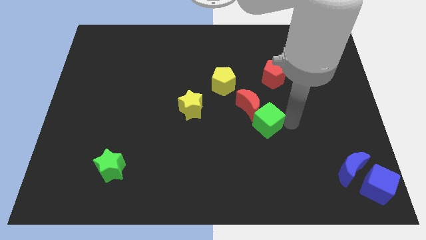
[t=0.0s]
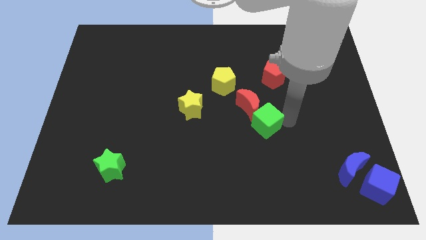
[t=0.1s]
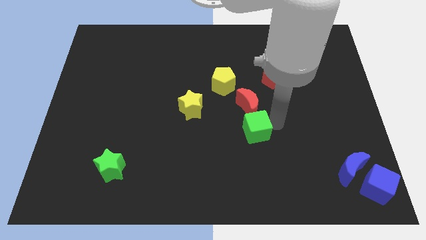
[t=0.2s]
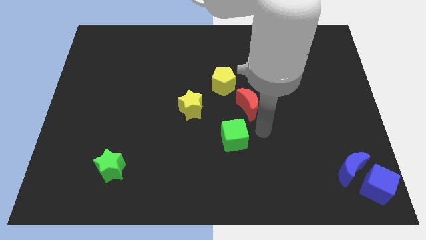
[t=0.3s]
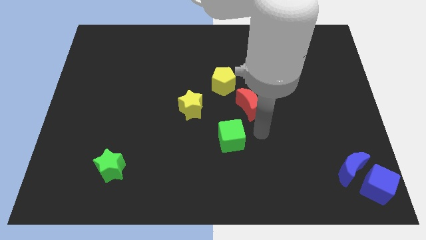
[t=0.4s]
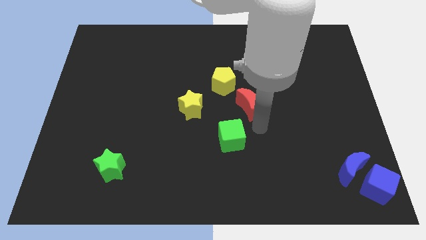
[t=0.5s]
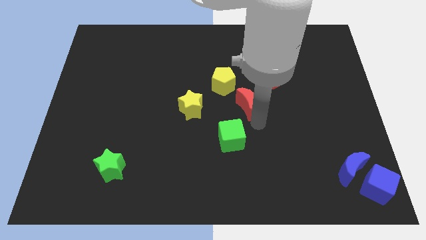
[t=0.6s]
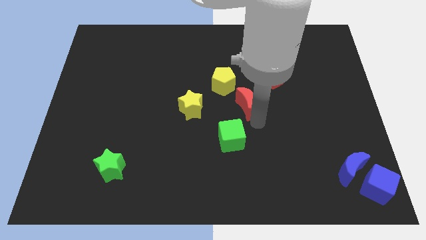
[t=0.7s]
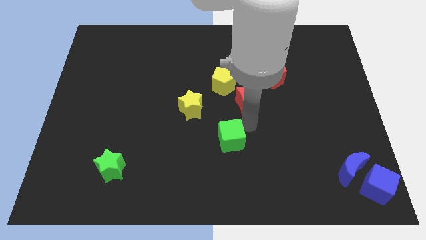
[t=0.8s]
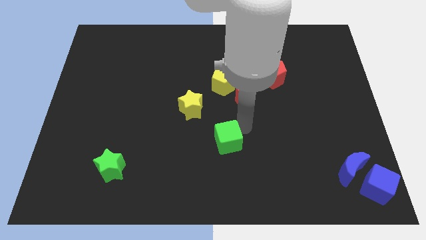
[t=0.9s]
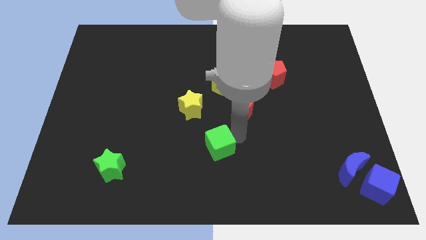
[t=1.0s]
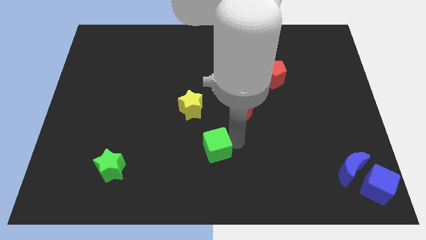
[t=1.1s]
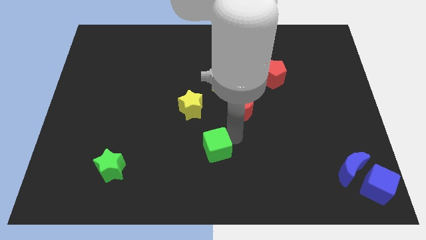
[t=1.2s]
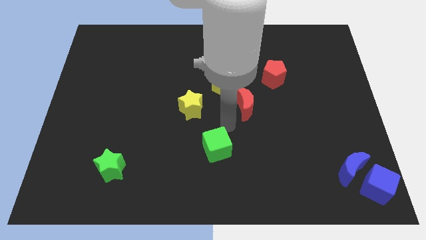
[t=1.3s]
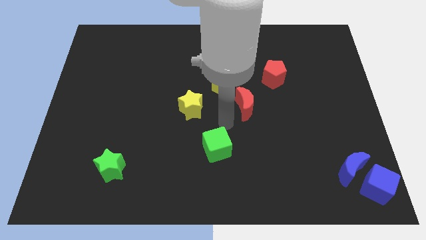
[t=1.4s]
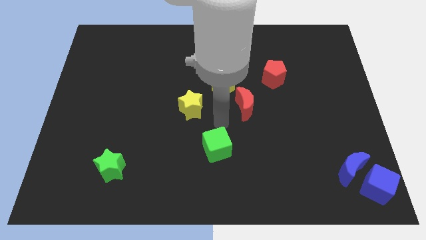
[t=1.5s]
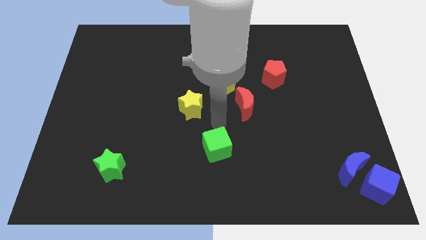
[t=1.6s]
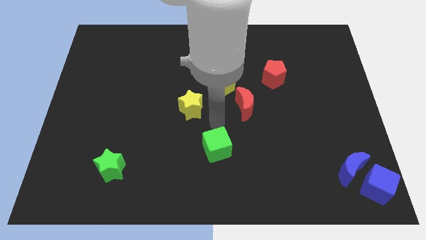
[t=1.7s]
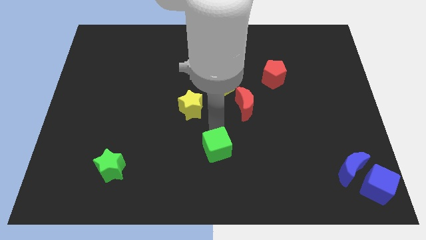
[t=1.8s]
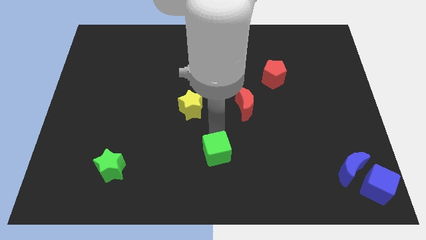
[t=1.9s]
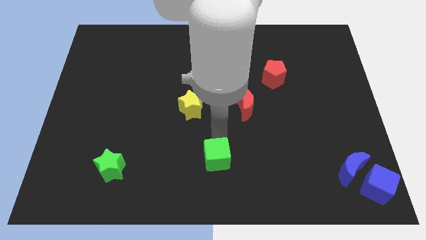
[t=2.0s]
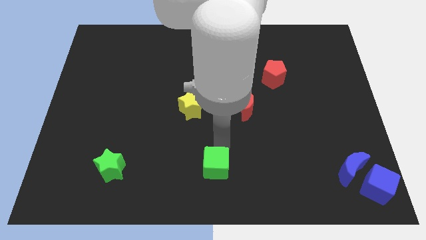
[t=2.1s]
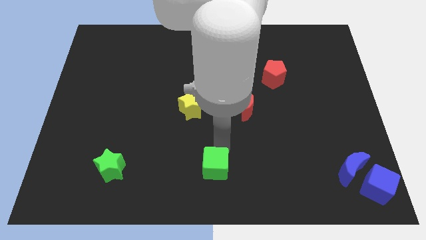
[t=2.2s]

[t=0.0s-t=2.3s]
push the green cube towards the bottom side of the board

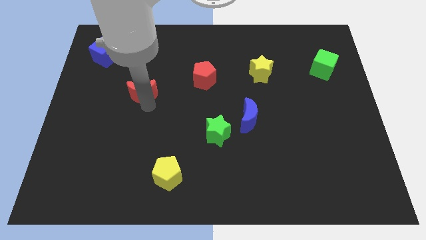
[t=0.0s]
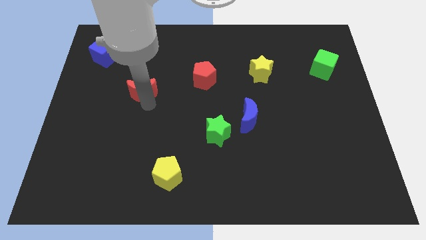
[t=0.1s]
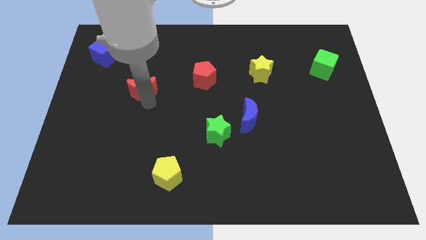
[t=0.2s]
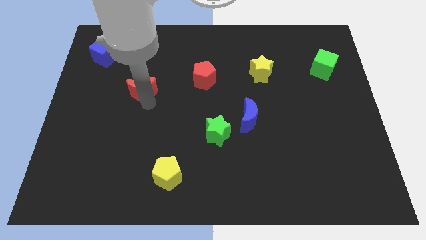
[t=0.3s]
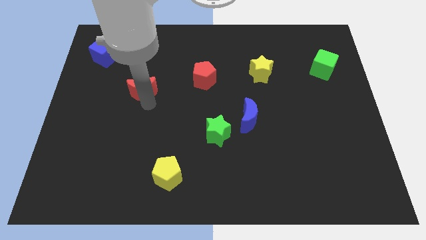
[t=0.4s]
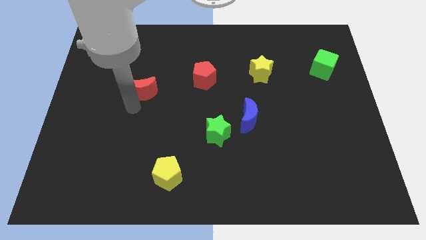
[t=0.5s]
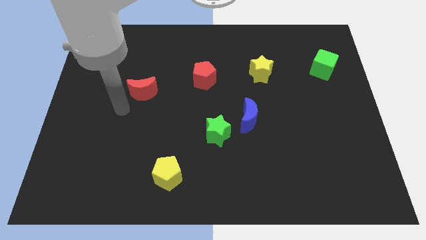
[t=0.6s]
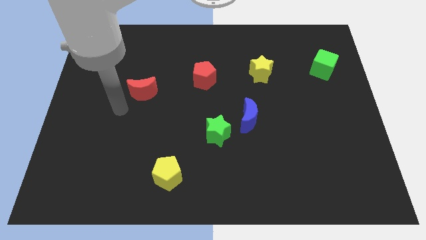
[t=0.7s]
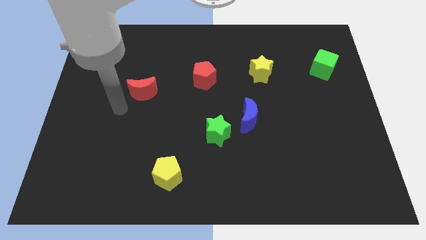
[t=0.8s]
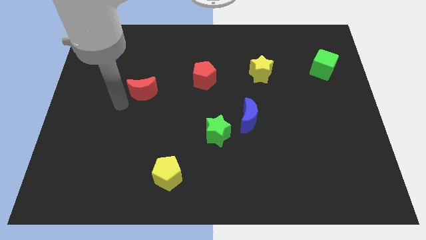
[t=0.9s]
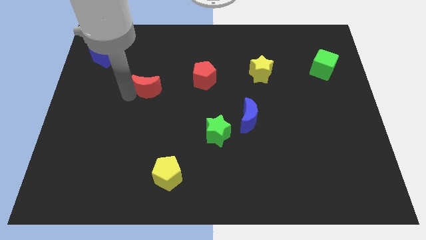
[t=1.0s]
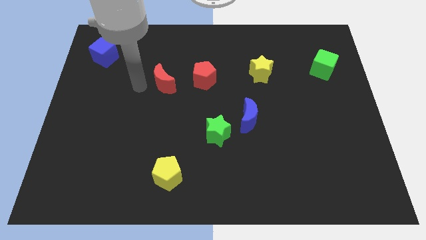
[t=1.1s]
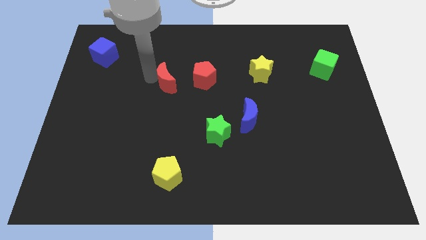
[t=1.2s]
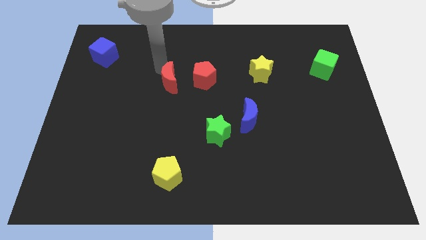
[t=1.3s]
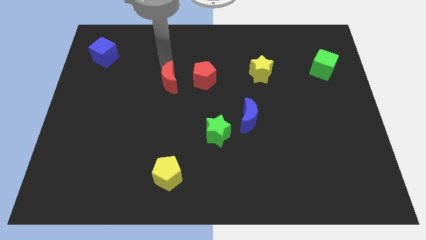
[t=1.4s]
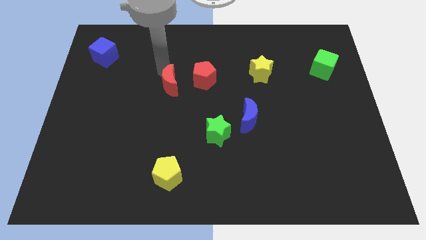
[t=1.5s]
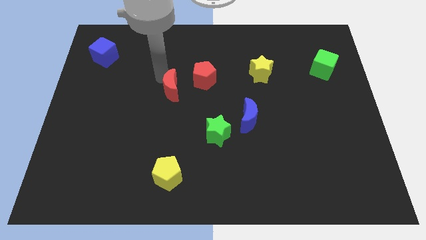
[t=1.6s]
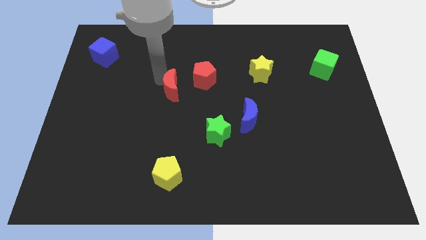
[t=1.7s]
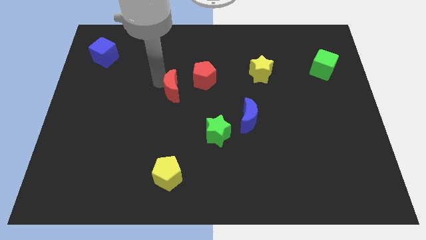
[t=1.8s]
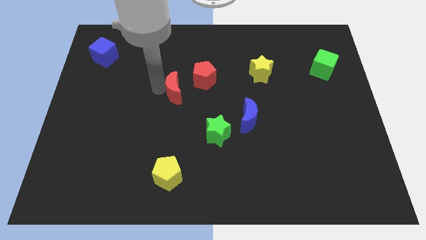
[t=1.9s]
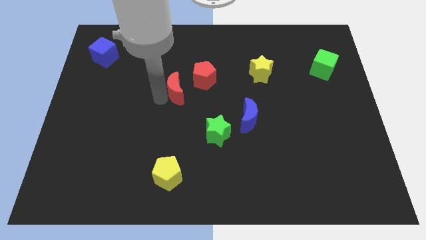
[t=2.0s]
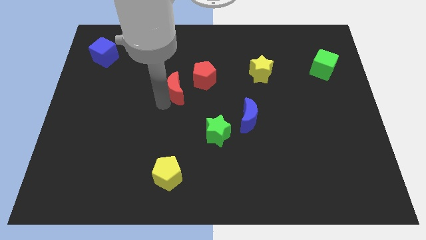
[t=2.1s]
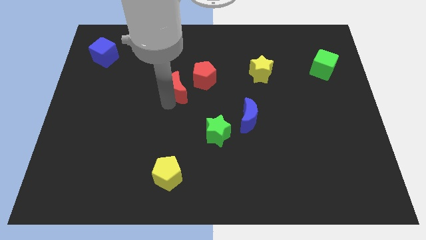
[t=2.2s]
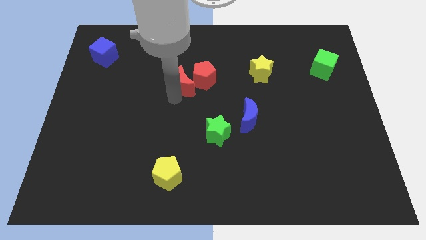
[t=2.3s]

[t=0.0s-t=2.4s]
move red moon towards the red pentagon

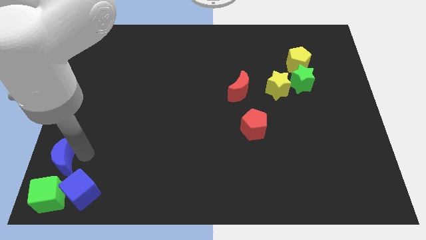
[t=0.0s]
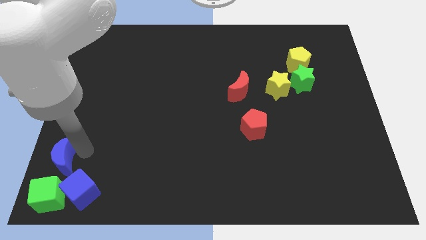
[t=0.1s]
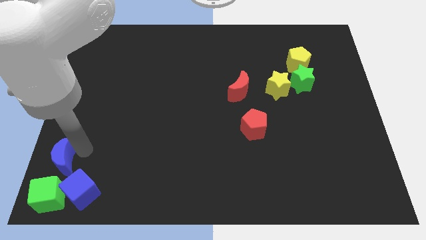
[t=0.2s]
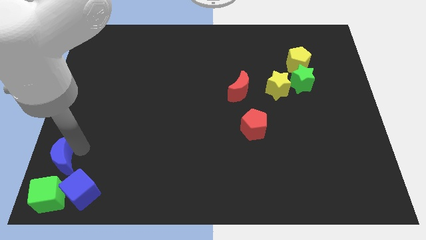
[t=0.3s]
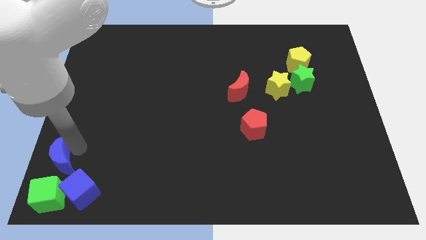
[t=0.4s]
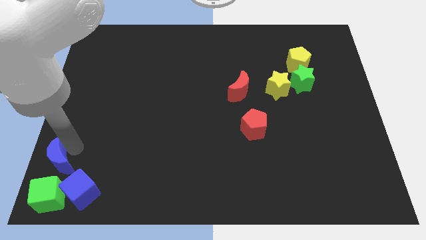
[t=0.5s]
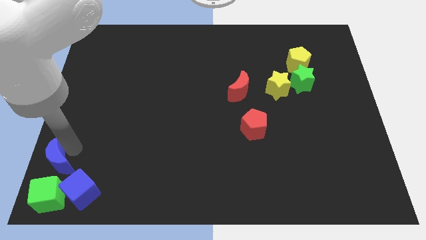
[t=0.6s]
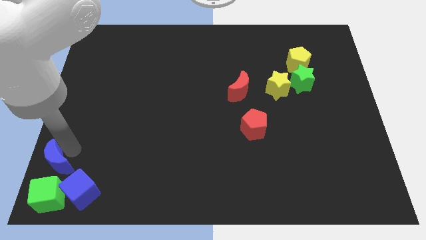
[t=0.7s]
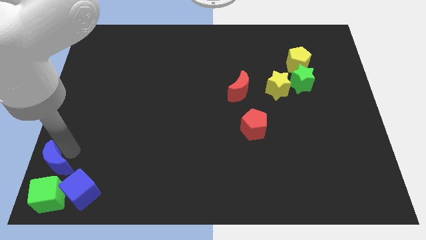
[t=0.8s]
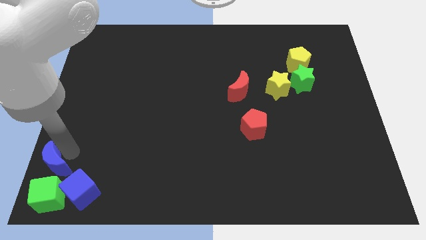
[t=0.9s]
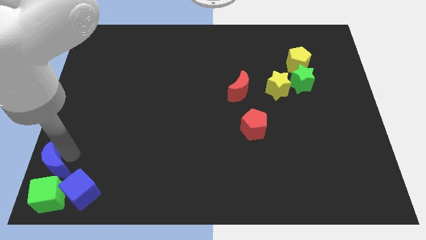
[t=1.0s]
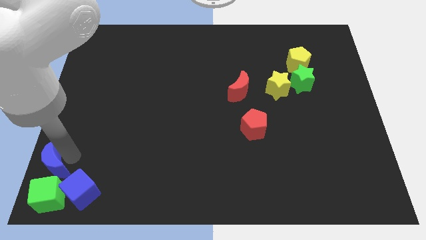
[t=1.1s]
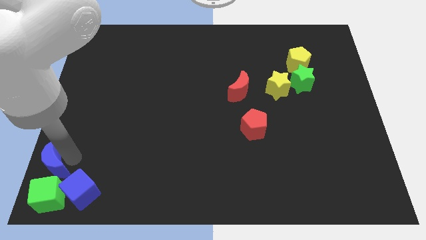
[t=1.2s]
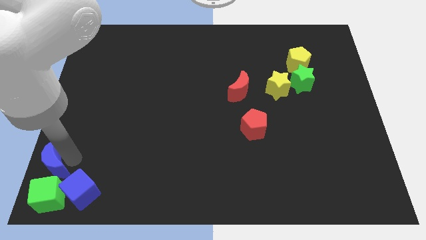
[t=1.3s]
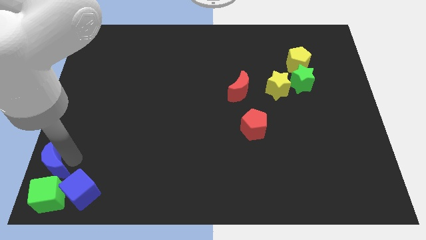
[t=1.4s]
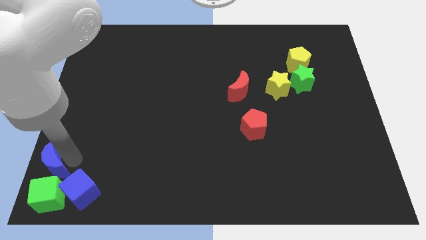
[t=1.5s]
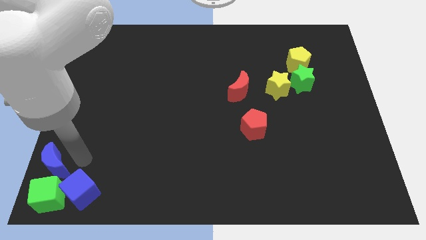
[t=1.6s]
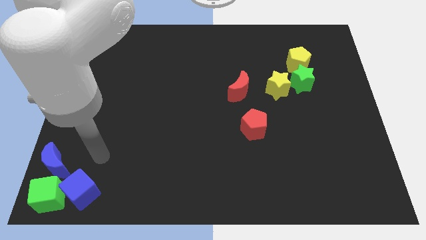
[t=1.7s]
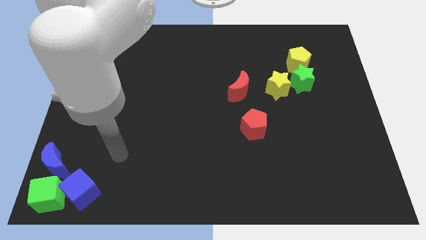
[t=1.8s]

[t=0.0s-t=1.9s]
place the blue crescent above the green cube

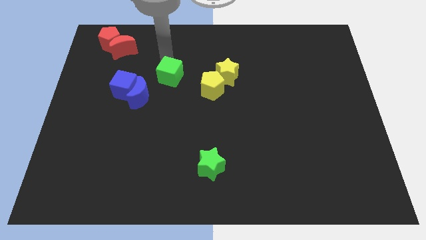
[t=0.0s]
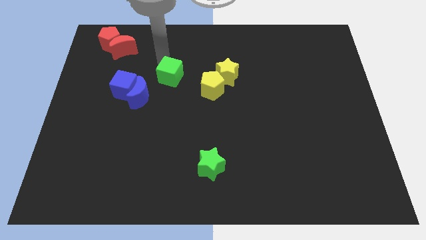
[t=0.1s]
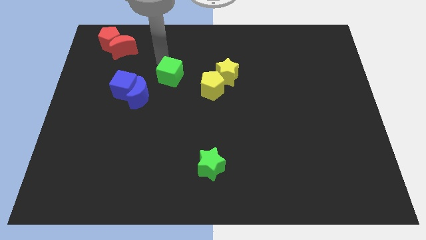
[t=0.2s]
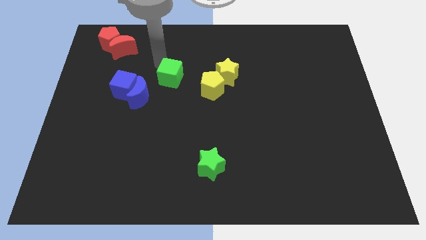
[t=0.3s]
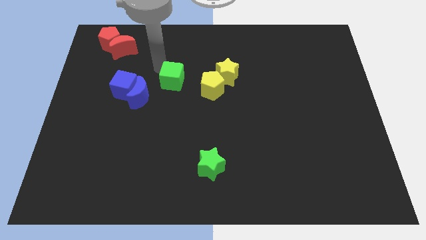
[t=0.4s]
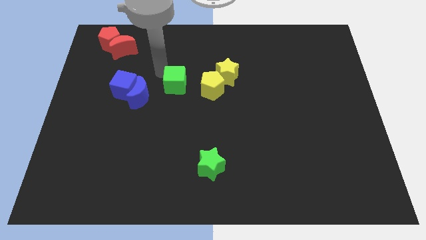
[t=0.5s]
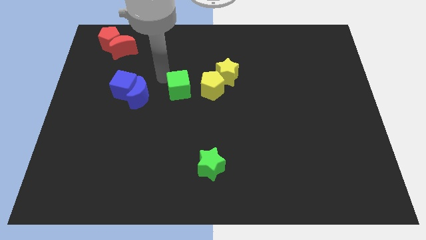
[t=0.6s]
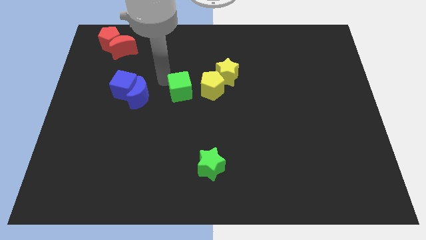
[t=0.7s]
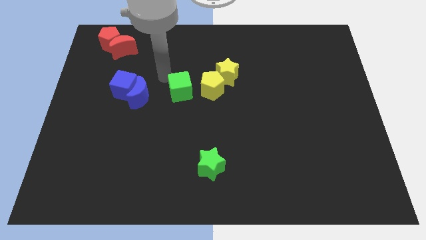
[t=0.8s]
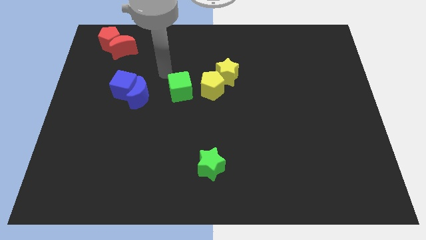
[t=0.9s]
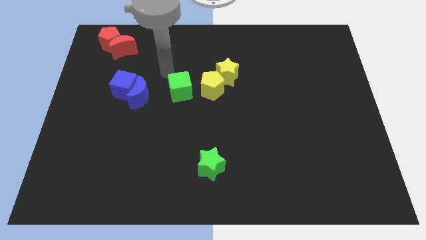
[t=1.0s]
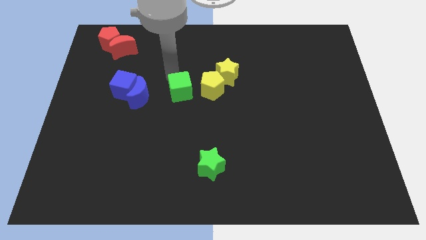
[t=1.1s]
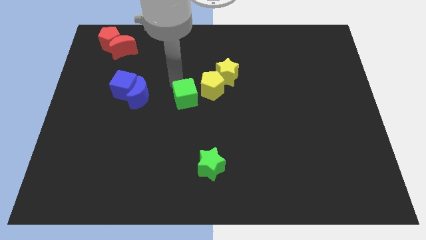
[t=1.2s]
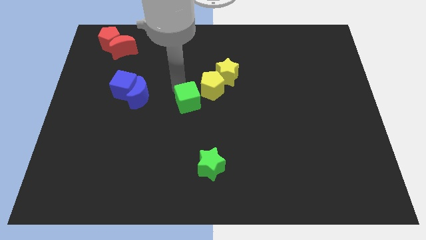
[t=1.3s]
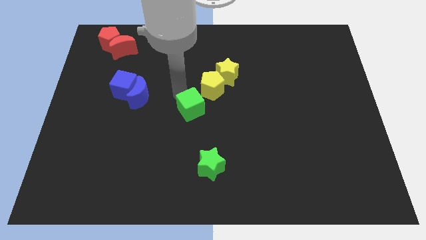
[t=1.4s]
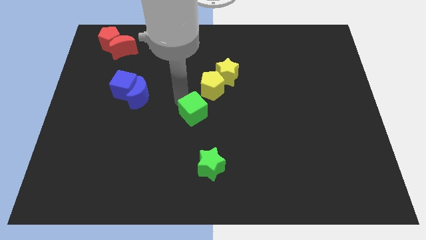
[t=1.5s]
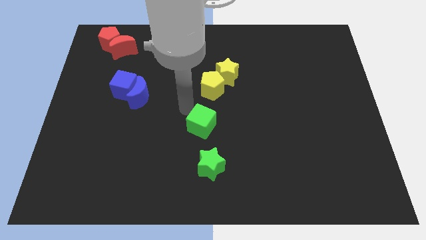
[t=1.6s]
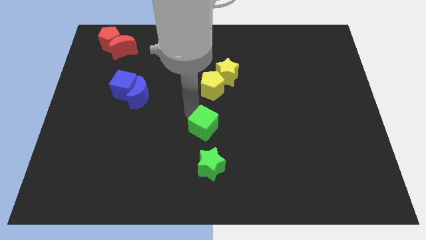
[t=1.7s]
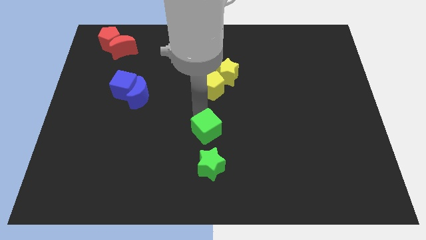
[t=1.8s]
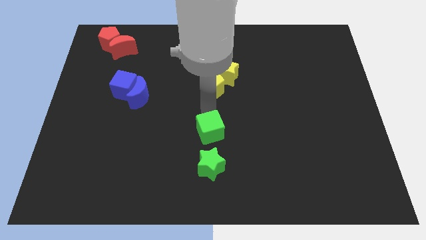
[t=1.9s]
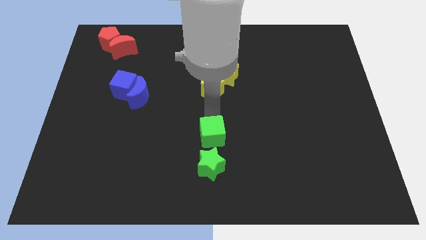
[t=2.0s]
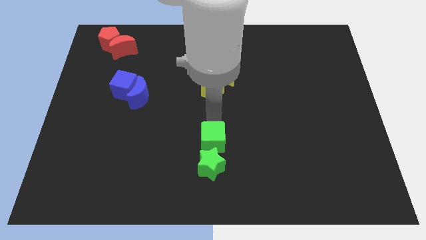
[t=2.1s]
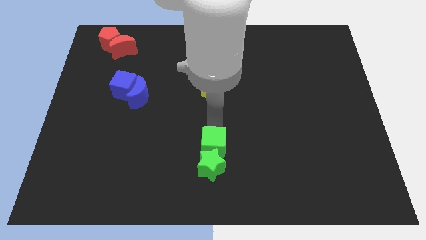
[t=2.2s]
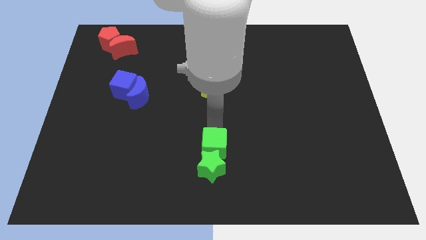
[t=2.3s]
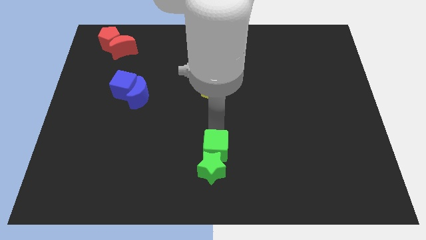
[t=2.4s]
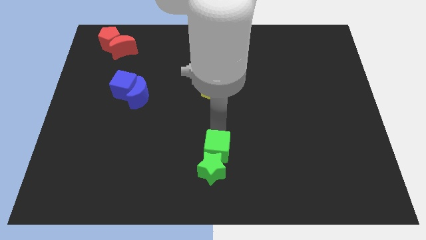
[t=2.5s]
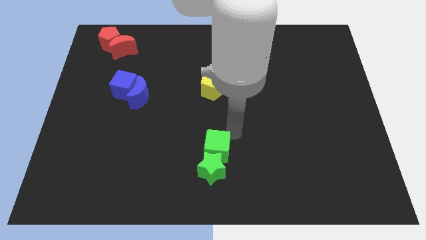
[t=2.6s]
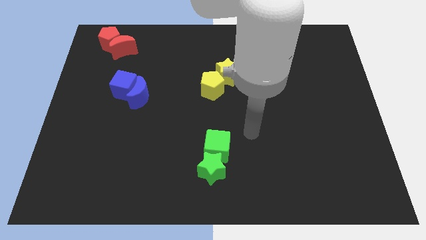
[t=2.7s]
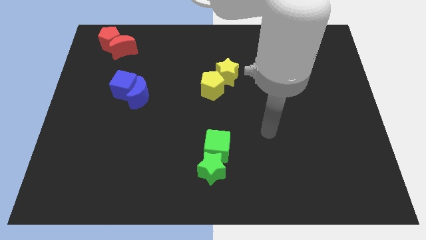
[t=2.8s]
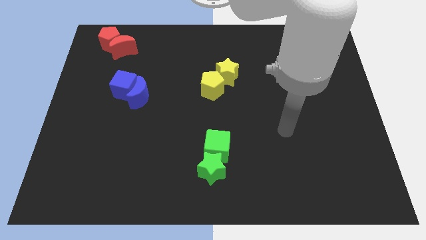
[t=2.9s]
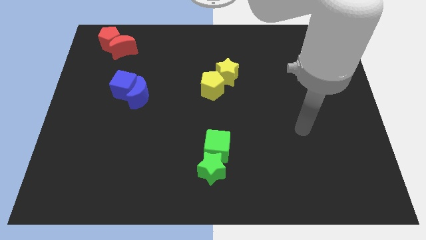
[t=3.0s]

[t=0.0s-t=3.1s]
place the green cube above to the green star
